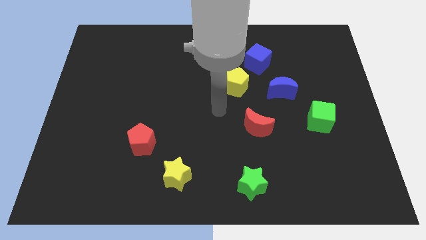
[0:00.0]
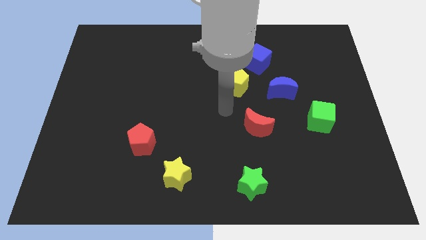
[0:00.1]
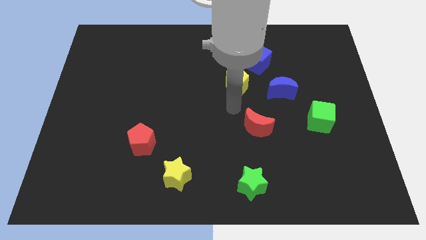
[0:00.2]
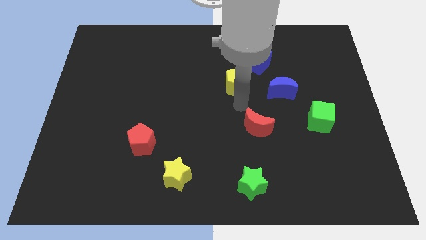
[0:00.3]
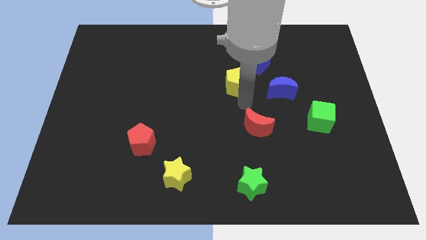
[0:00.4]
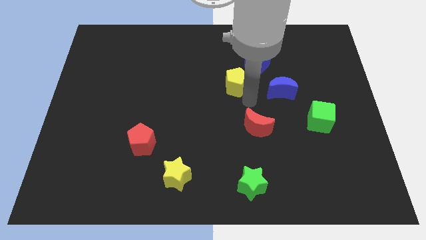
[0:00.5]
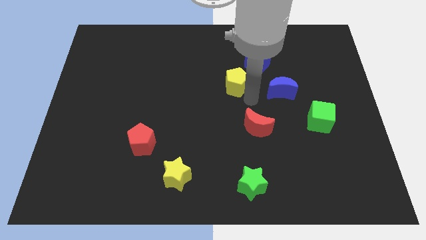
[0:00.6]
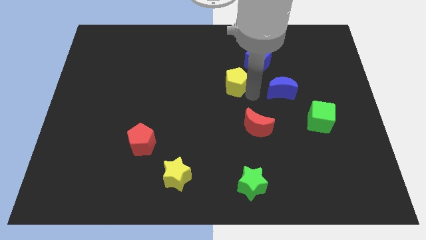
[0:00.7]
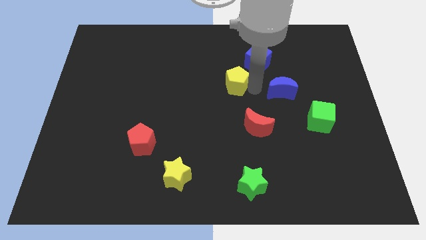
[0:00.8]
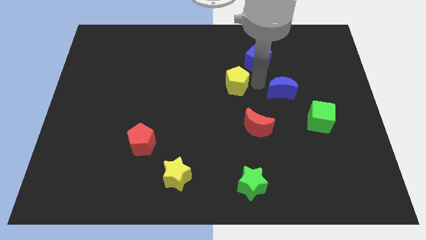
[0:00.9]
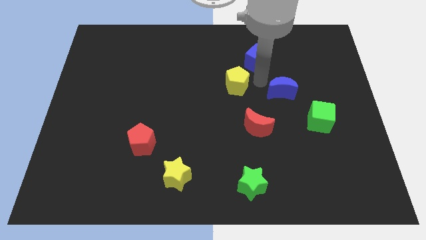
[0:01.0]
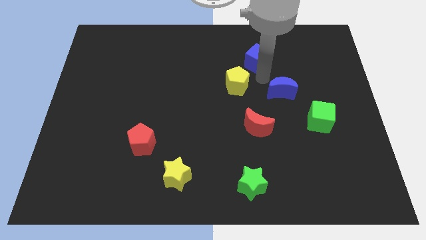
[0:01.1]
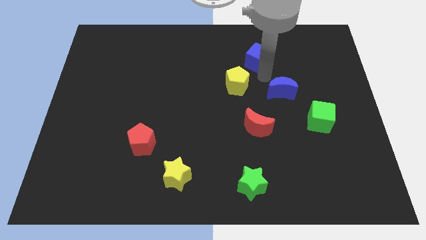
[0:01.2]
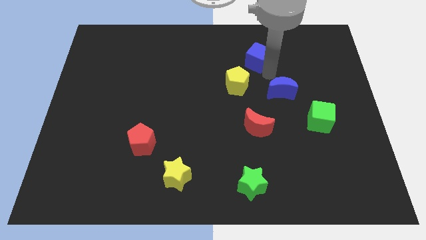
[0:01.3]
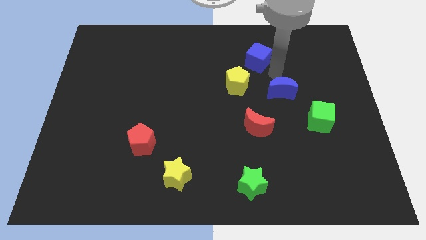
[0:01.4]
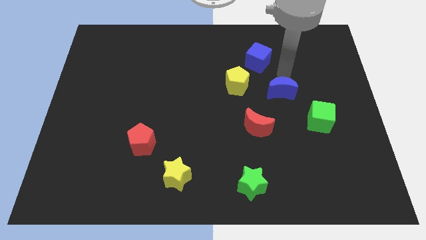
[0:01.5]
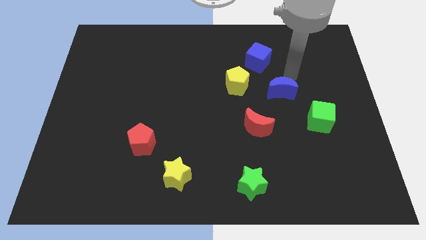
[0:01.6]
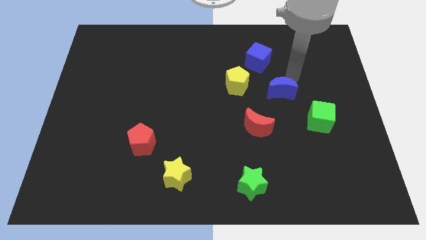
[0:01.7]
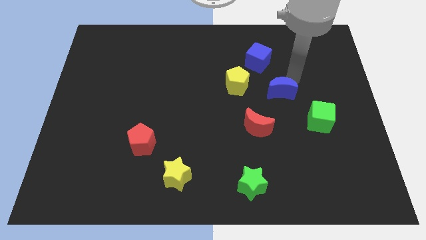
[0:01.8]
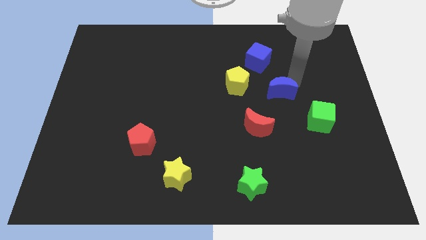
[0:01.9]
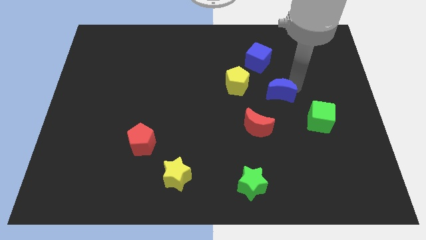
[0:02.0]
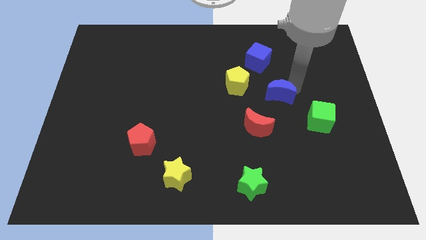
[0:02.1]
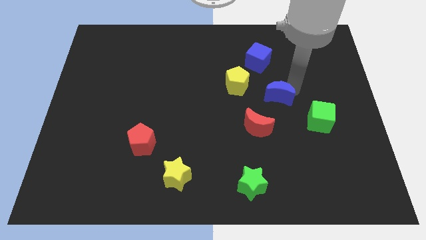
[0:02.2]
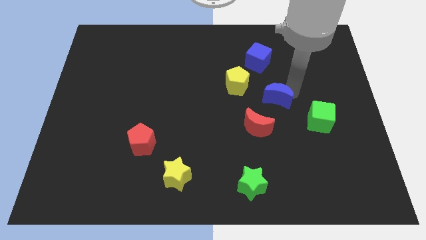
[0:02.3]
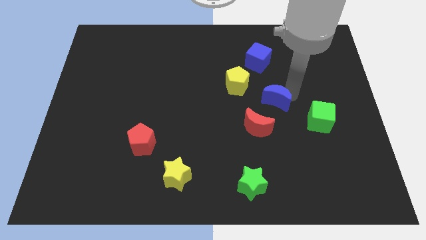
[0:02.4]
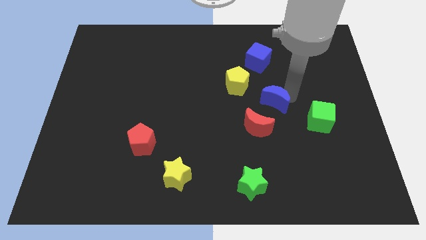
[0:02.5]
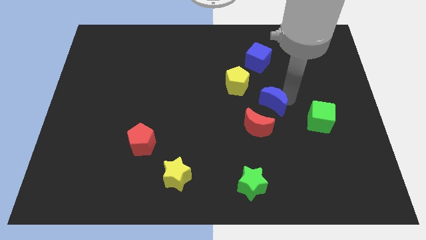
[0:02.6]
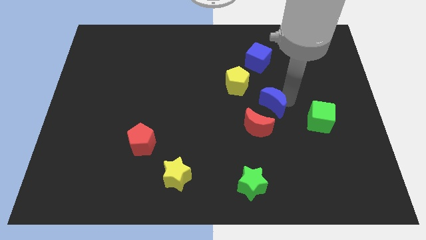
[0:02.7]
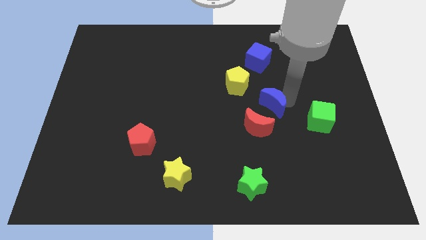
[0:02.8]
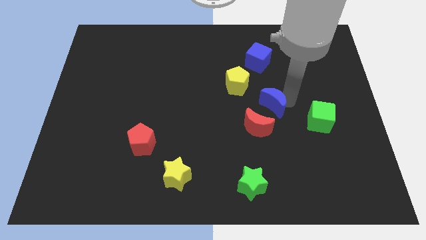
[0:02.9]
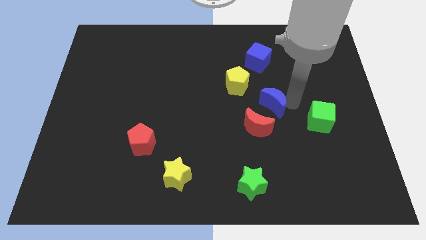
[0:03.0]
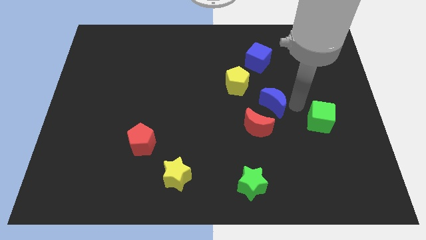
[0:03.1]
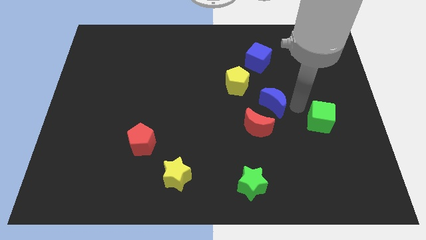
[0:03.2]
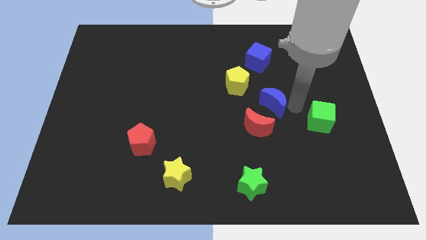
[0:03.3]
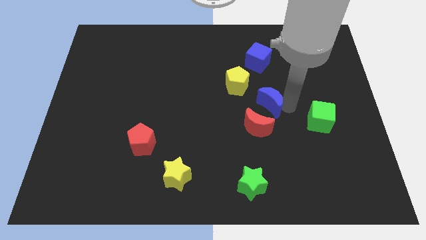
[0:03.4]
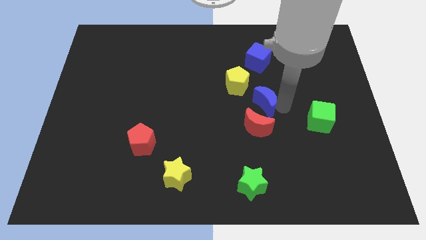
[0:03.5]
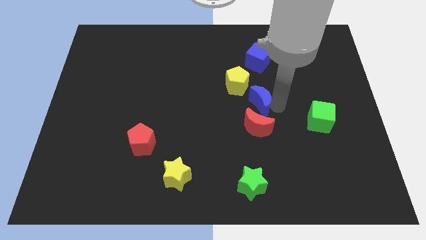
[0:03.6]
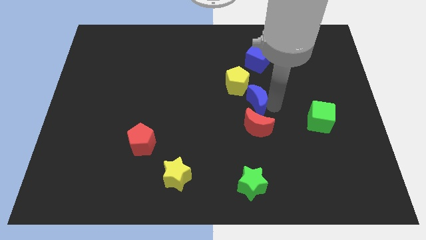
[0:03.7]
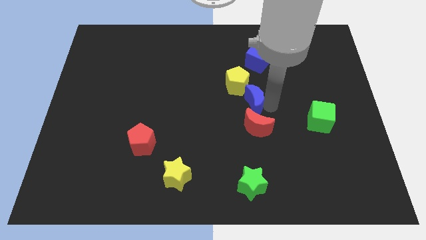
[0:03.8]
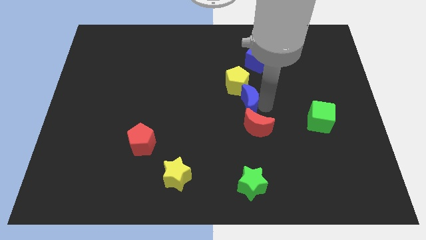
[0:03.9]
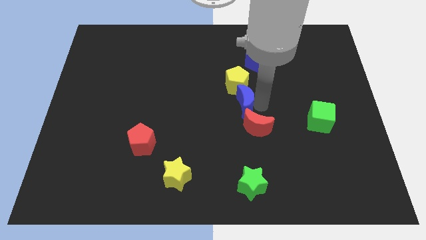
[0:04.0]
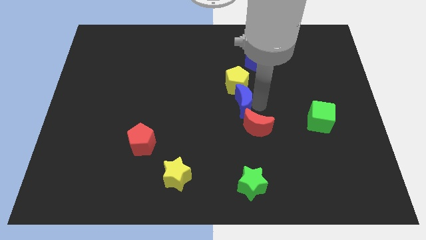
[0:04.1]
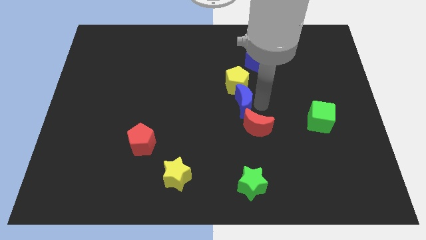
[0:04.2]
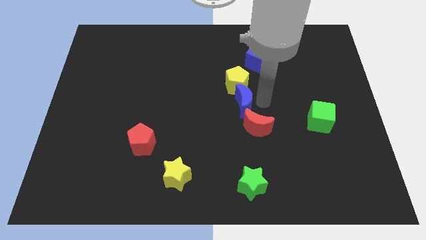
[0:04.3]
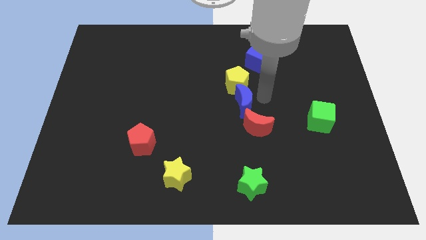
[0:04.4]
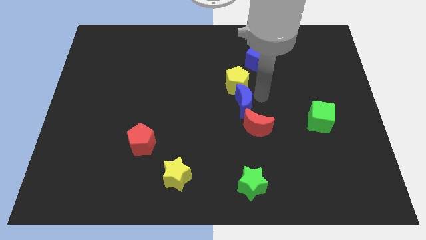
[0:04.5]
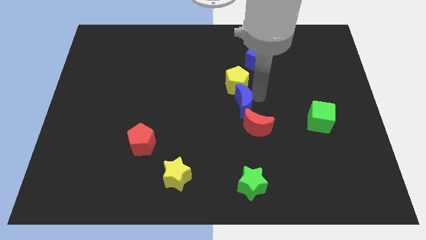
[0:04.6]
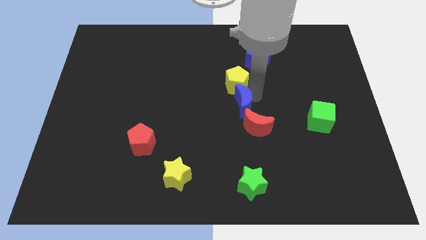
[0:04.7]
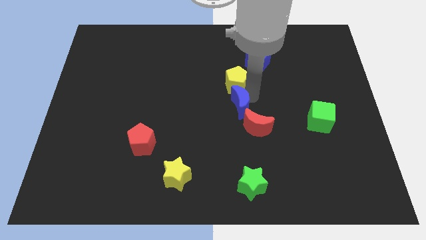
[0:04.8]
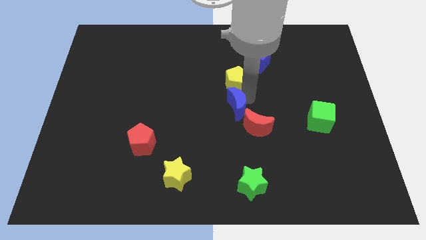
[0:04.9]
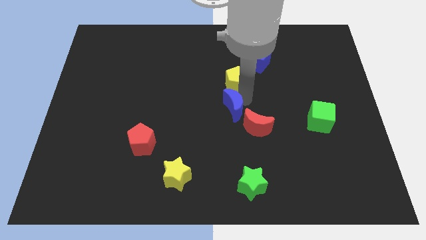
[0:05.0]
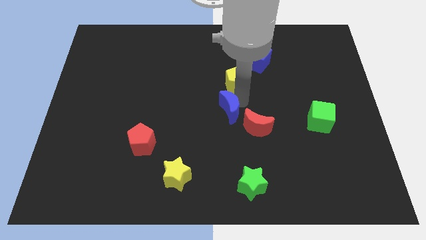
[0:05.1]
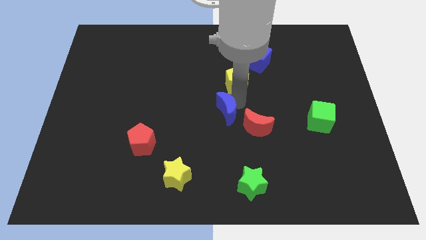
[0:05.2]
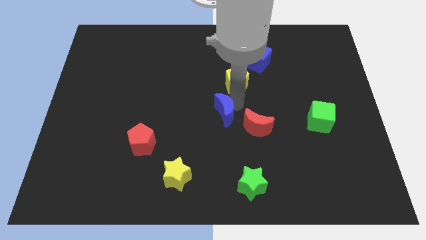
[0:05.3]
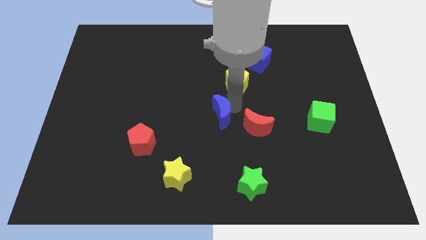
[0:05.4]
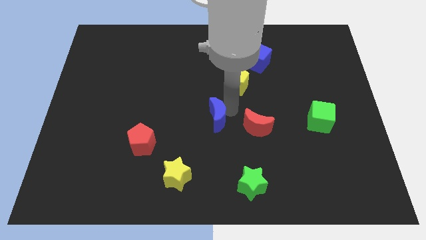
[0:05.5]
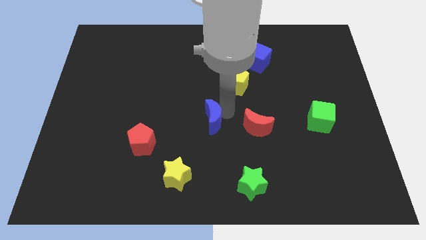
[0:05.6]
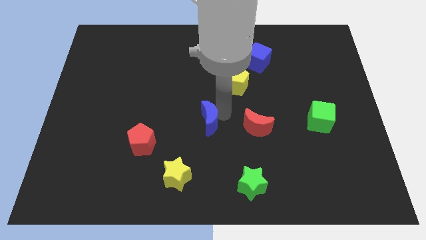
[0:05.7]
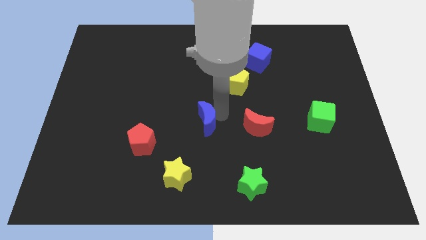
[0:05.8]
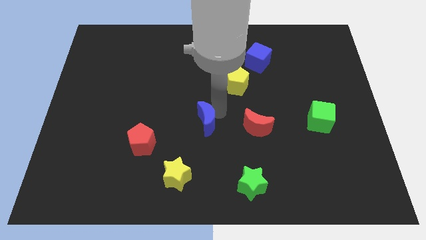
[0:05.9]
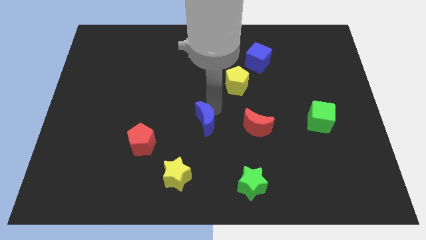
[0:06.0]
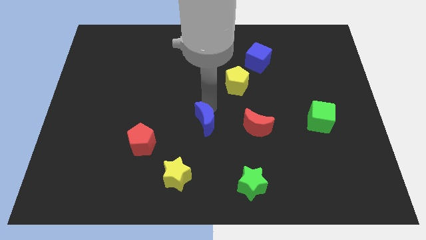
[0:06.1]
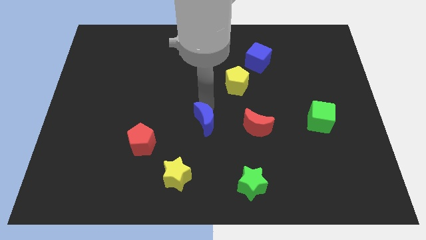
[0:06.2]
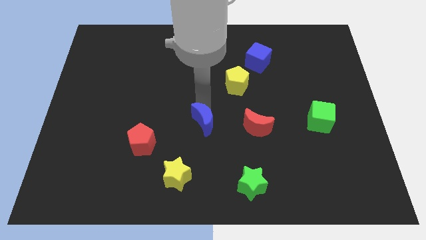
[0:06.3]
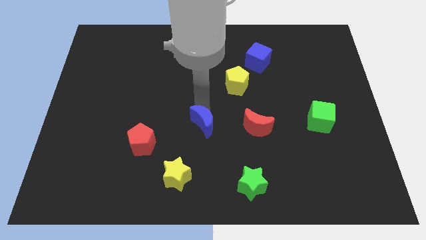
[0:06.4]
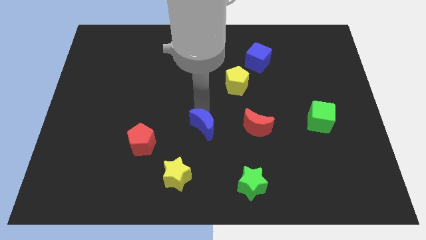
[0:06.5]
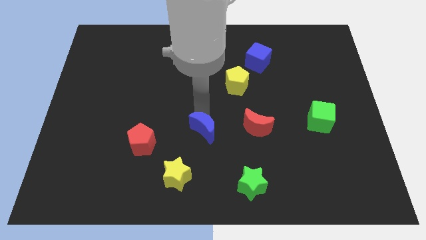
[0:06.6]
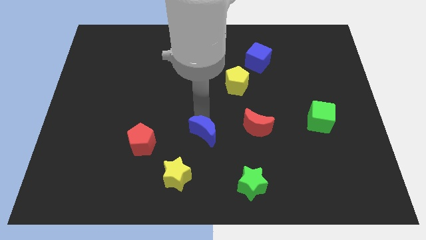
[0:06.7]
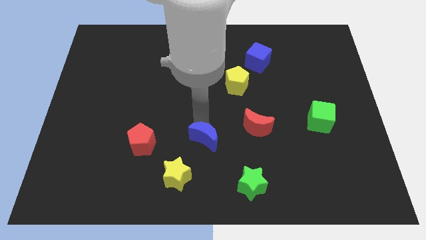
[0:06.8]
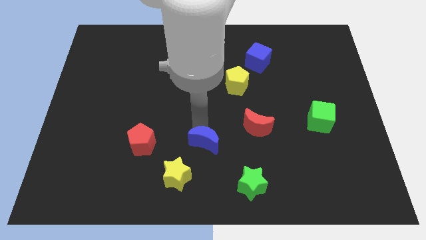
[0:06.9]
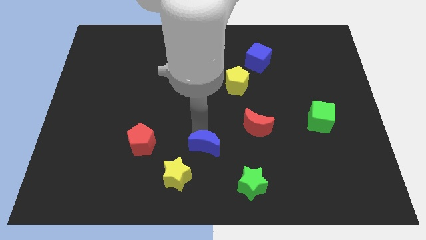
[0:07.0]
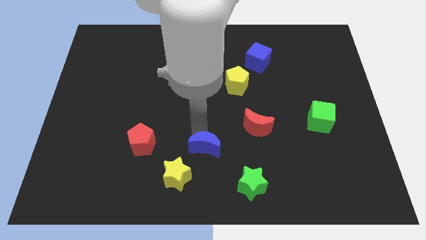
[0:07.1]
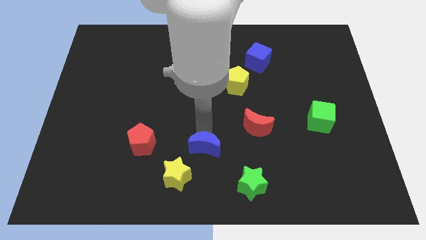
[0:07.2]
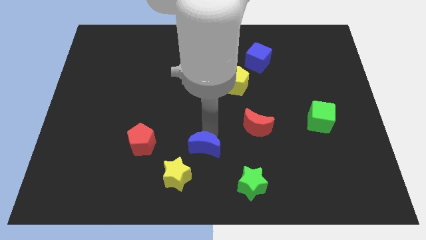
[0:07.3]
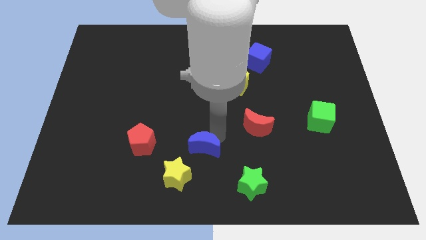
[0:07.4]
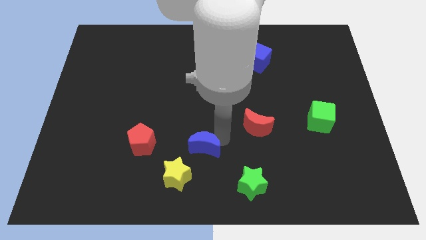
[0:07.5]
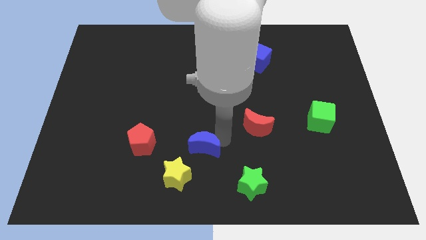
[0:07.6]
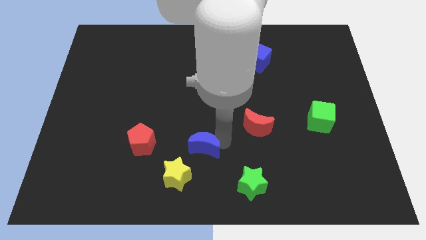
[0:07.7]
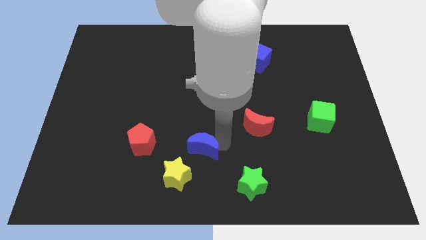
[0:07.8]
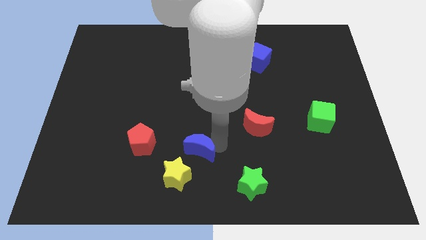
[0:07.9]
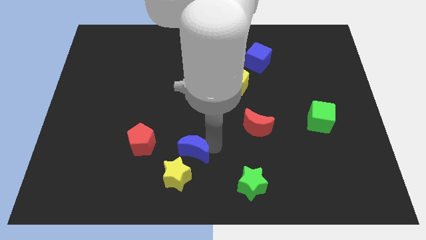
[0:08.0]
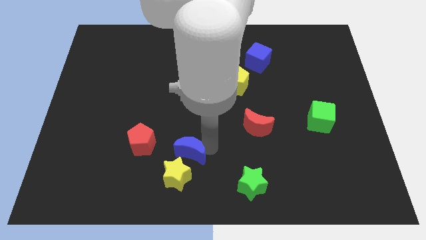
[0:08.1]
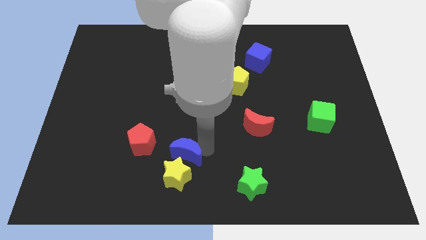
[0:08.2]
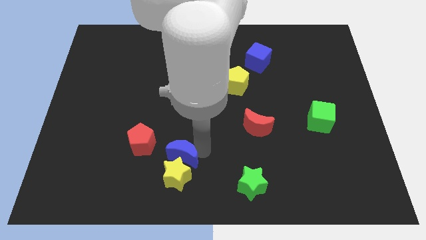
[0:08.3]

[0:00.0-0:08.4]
push the blue moon towards the yellow star
